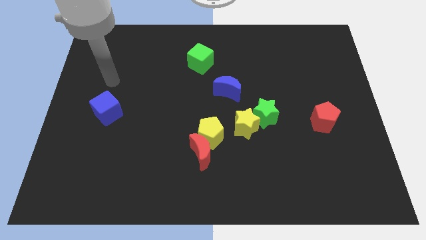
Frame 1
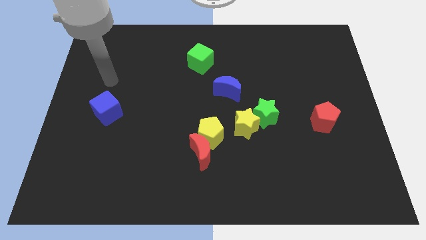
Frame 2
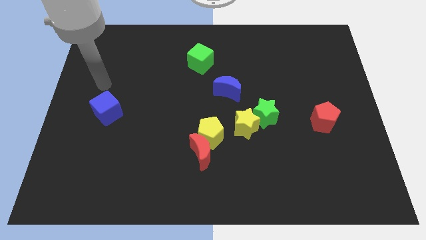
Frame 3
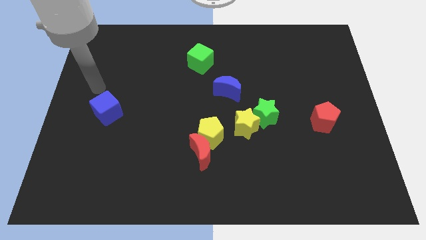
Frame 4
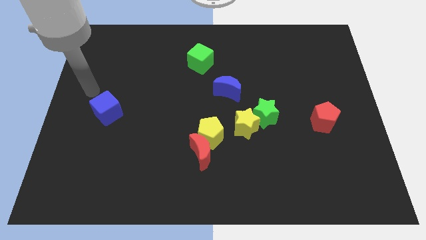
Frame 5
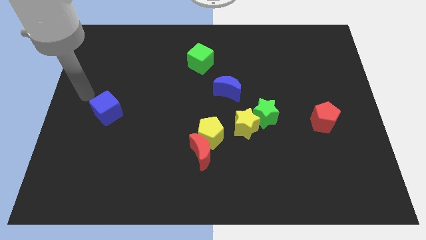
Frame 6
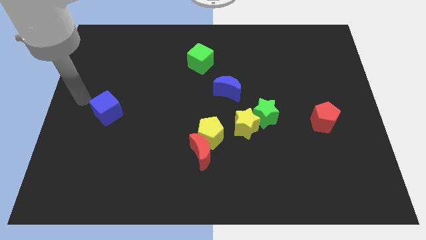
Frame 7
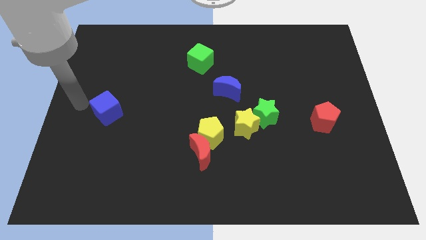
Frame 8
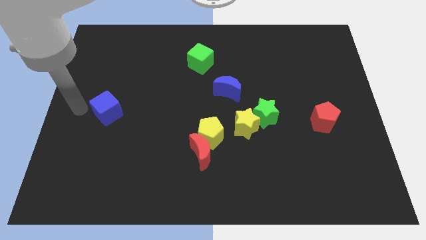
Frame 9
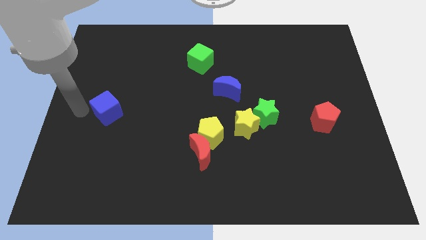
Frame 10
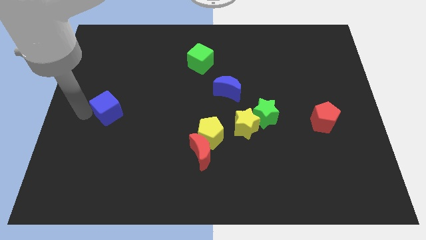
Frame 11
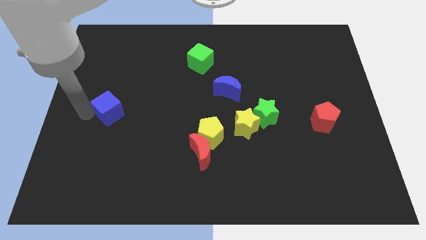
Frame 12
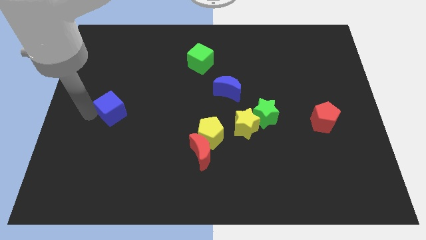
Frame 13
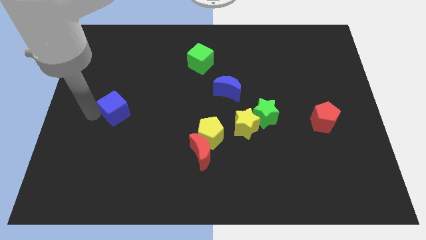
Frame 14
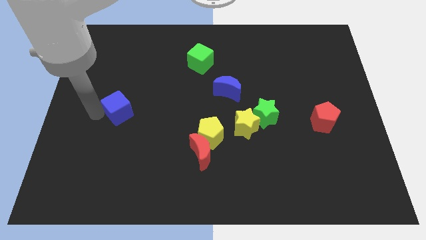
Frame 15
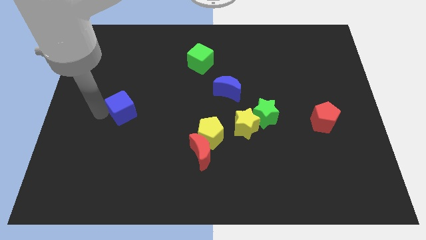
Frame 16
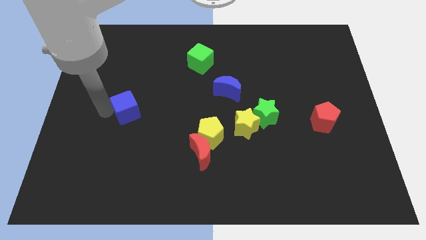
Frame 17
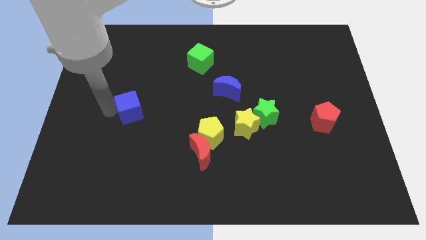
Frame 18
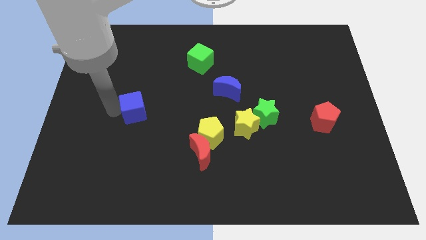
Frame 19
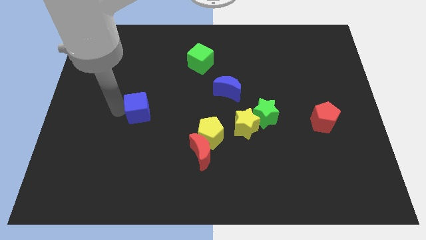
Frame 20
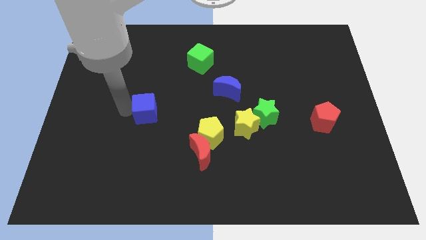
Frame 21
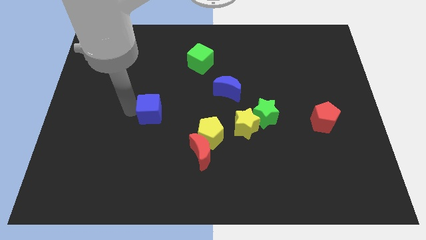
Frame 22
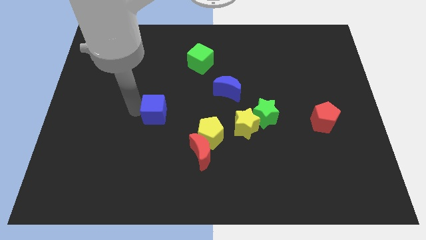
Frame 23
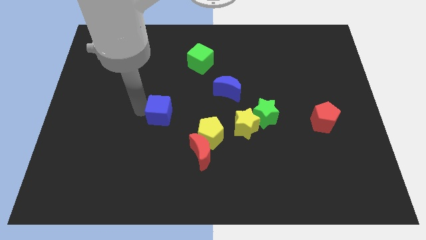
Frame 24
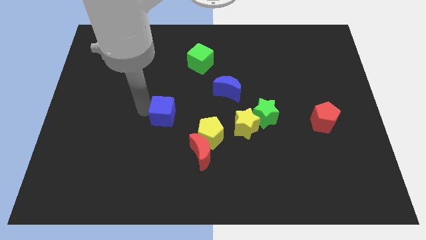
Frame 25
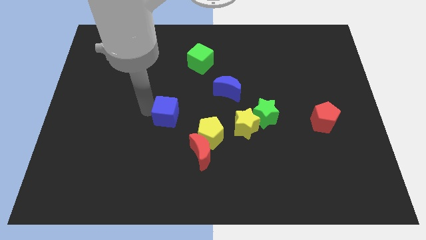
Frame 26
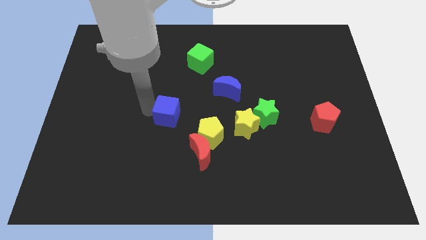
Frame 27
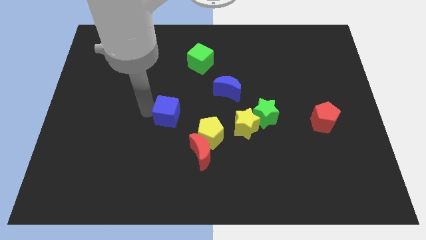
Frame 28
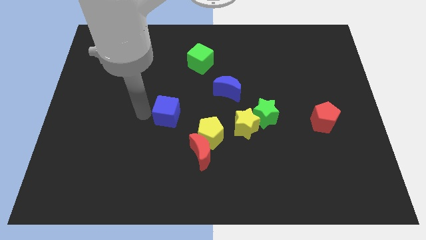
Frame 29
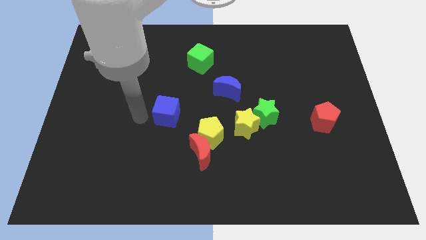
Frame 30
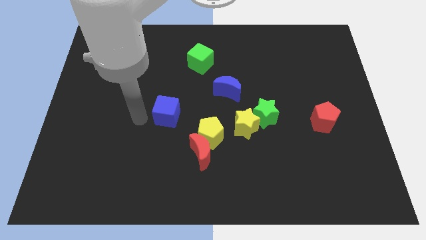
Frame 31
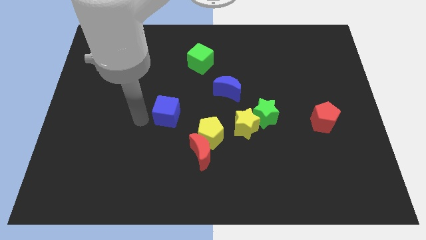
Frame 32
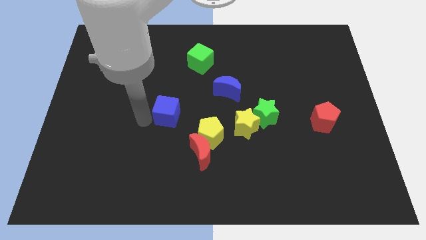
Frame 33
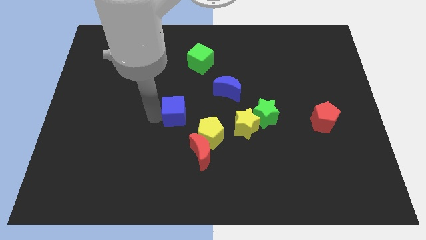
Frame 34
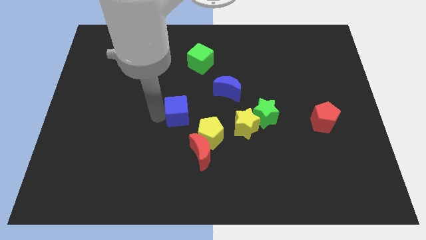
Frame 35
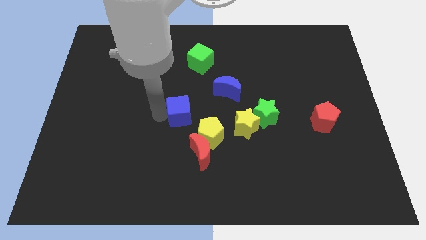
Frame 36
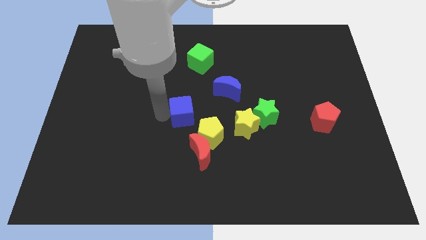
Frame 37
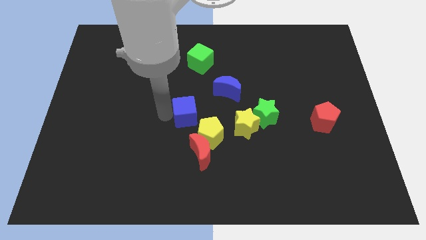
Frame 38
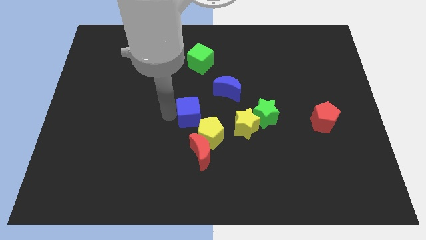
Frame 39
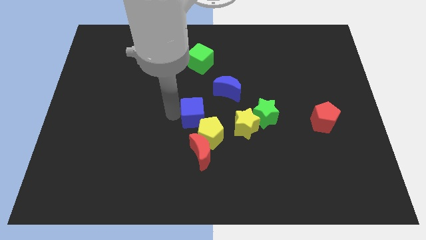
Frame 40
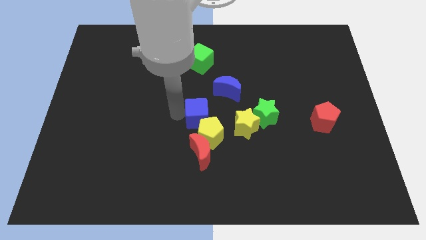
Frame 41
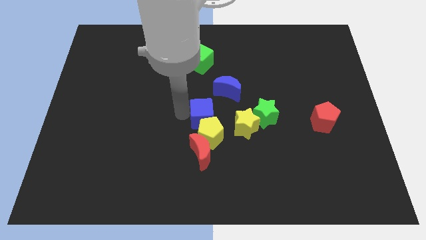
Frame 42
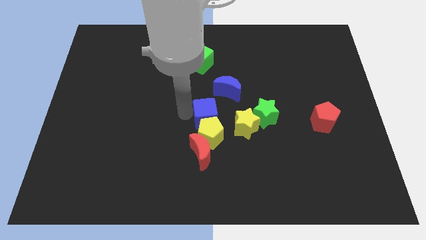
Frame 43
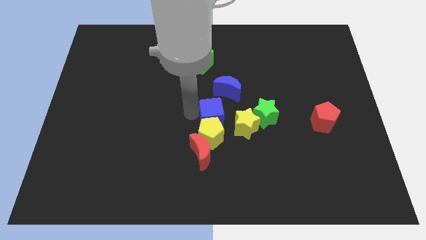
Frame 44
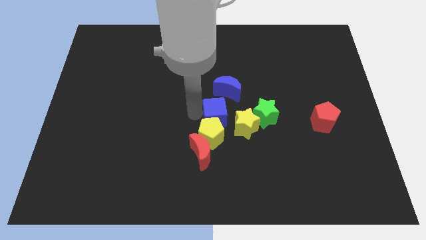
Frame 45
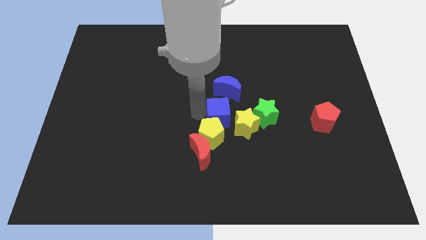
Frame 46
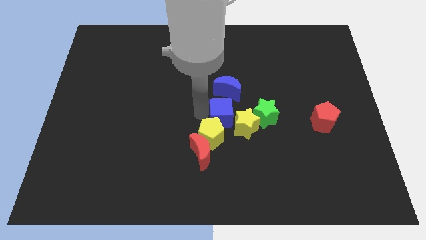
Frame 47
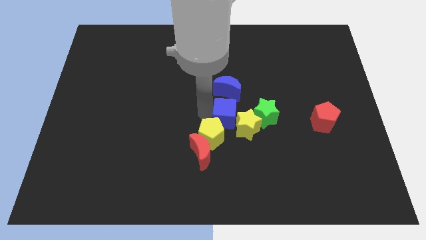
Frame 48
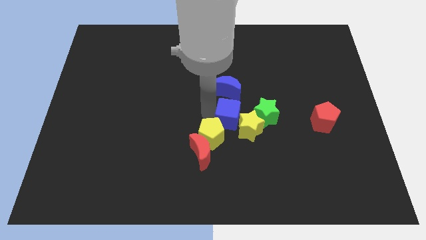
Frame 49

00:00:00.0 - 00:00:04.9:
put the blue cube to the yellow star

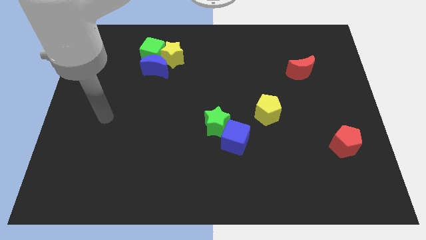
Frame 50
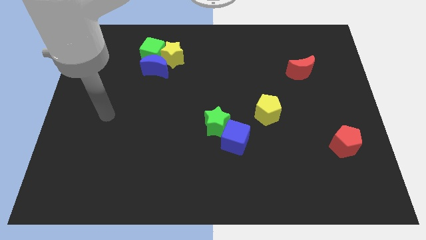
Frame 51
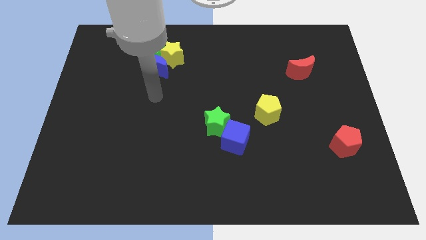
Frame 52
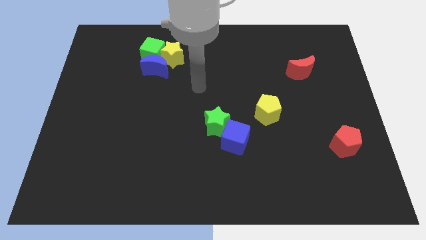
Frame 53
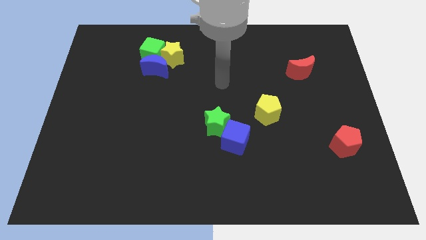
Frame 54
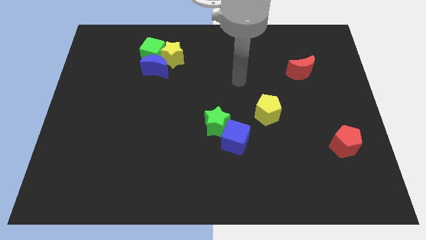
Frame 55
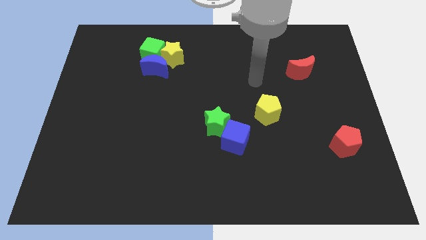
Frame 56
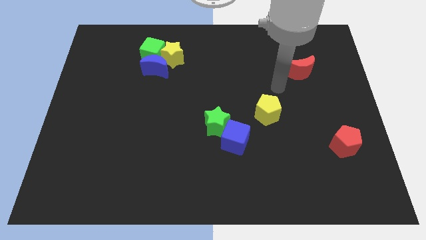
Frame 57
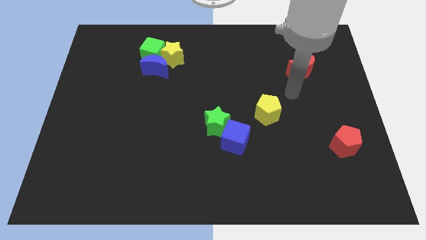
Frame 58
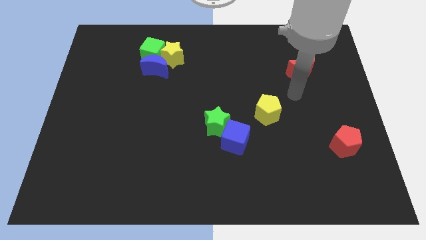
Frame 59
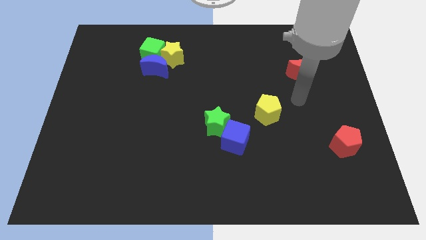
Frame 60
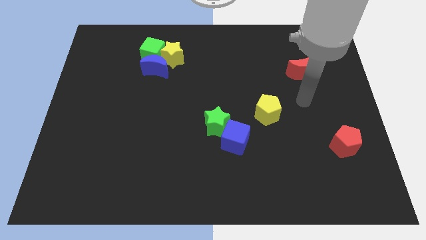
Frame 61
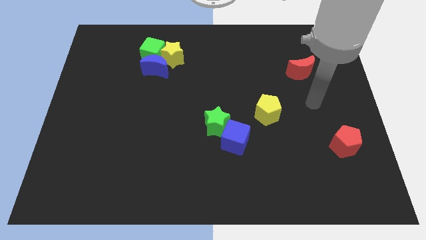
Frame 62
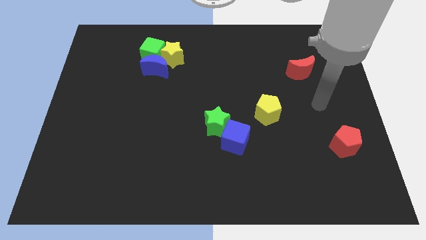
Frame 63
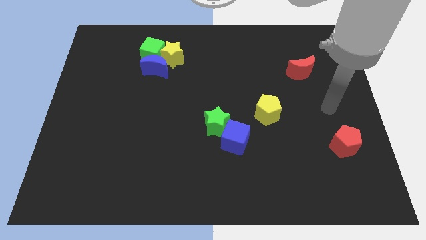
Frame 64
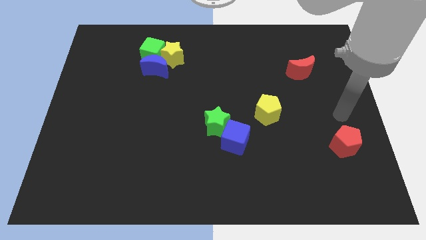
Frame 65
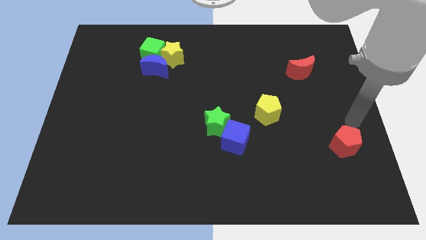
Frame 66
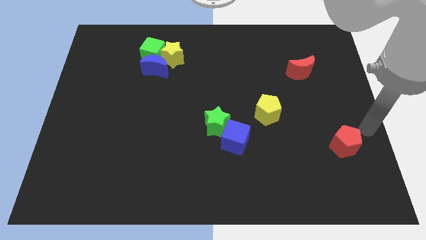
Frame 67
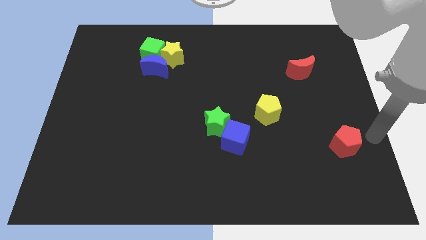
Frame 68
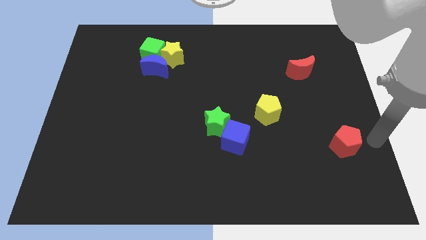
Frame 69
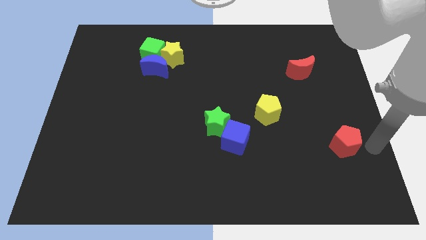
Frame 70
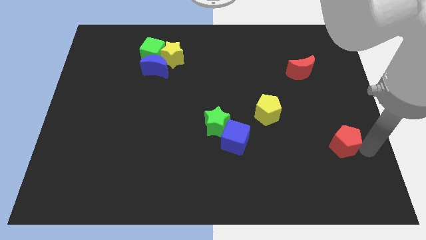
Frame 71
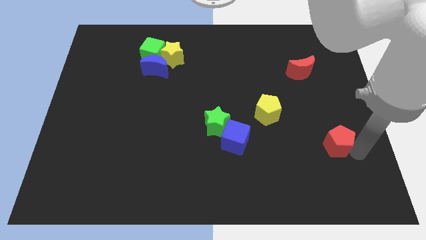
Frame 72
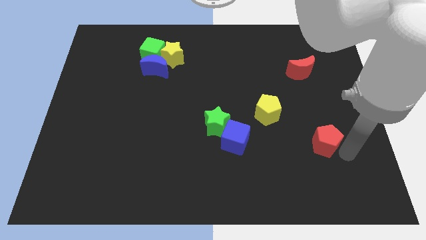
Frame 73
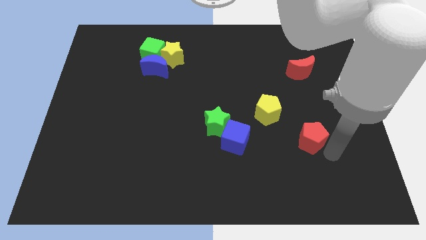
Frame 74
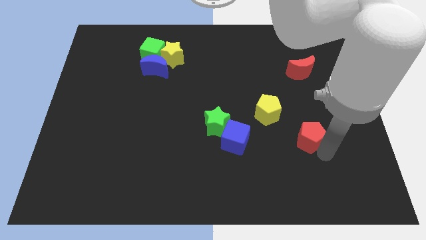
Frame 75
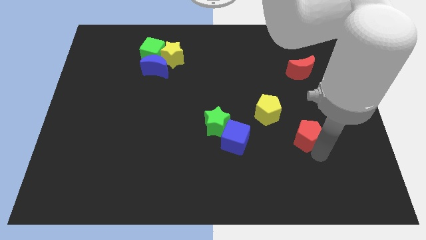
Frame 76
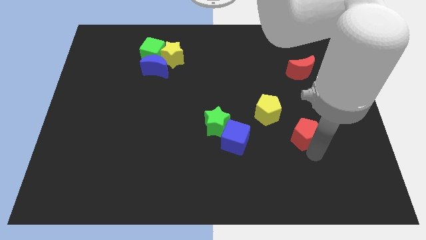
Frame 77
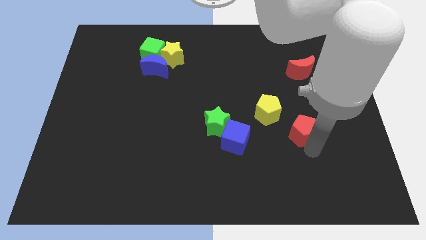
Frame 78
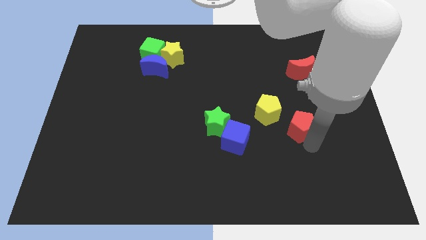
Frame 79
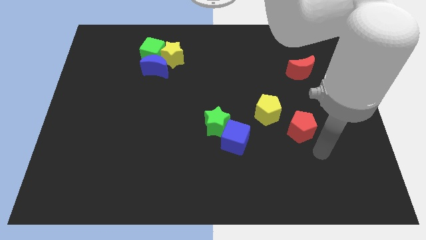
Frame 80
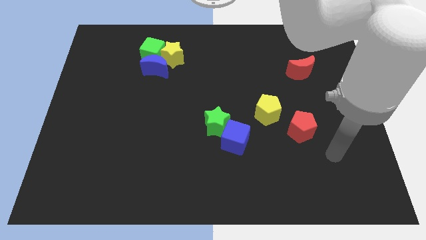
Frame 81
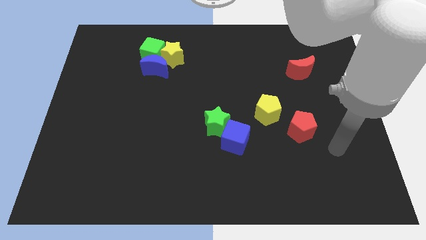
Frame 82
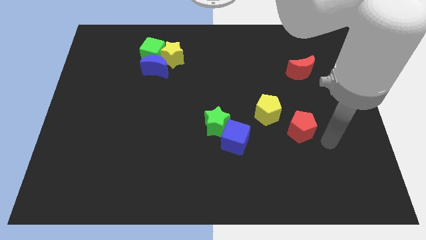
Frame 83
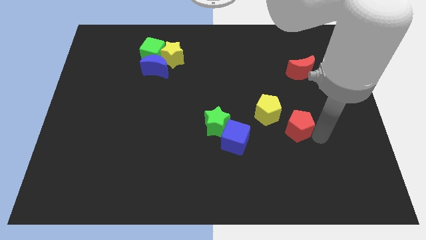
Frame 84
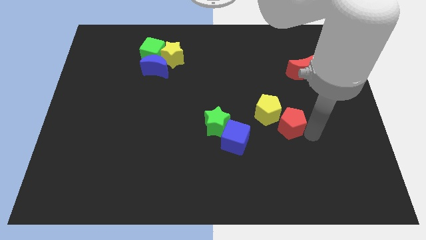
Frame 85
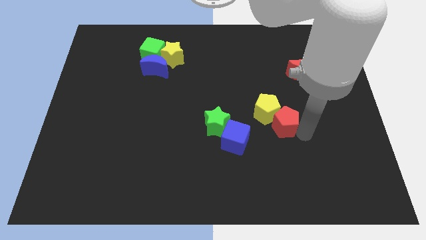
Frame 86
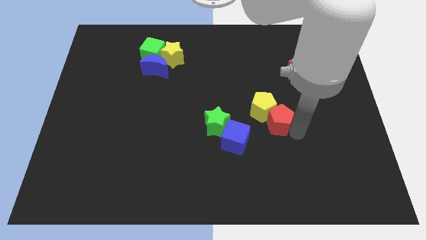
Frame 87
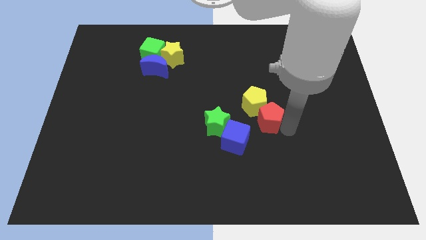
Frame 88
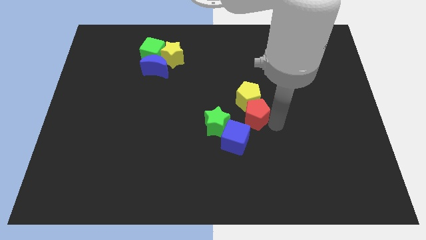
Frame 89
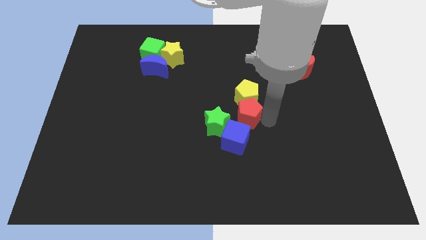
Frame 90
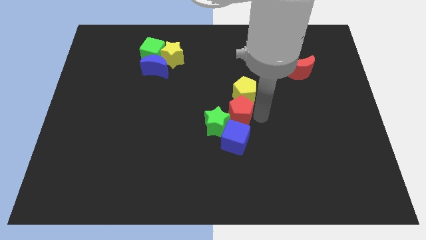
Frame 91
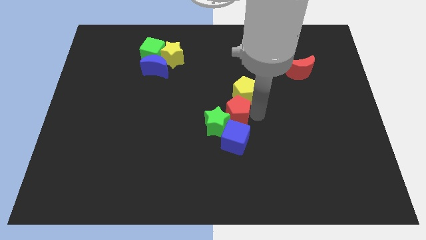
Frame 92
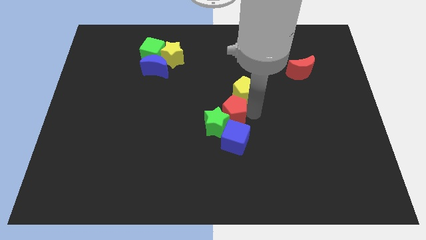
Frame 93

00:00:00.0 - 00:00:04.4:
push the red pentagon towards the green star
